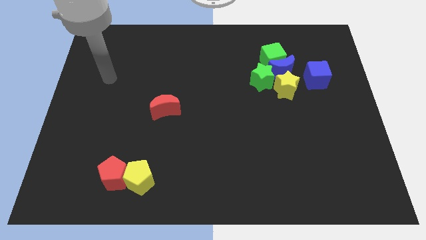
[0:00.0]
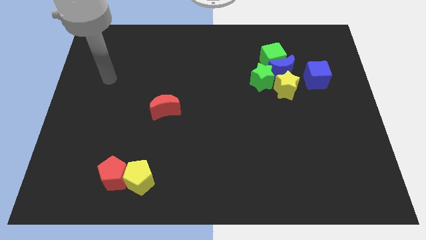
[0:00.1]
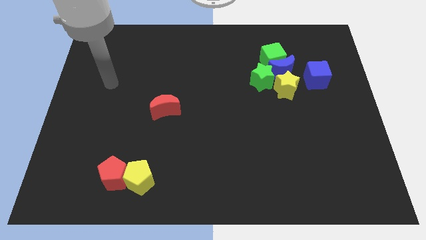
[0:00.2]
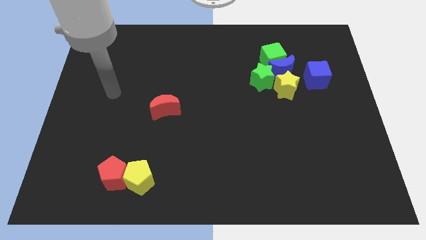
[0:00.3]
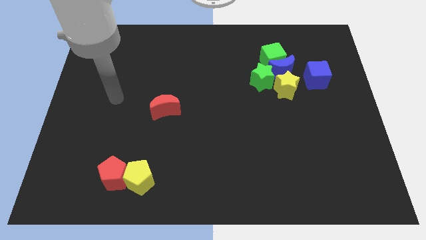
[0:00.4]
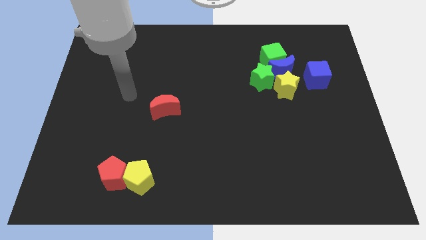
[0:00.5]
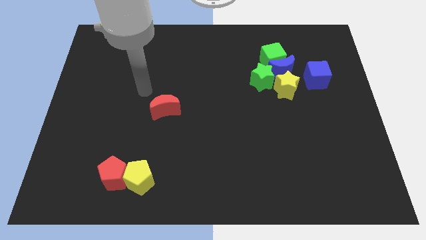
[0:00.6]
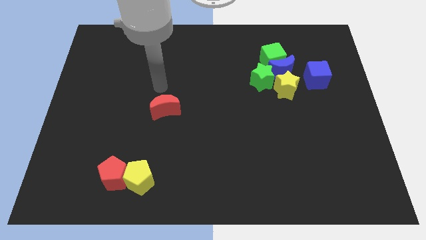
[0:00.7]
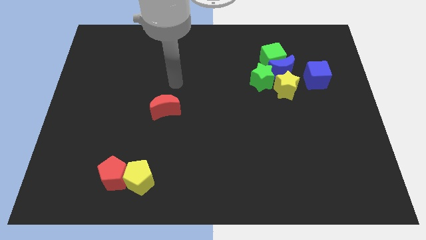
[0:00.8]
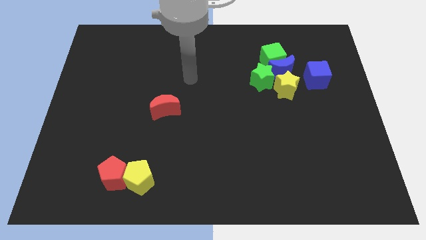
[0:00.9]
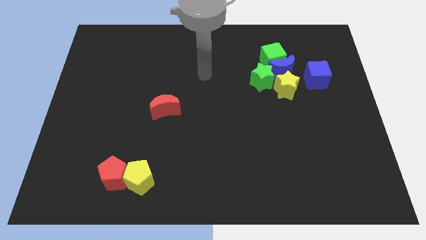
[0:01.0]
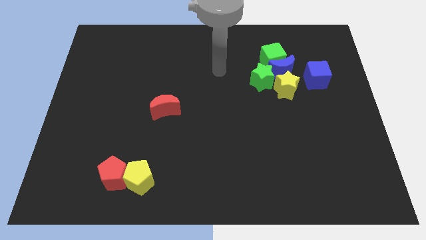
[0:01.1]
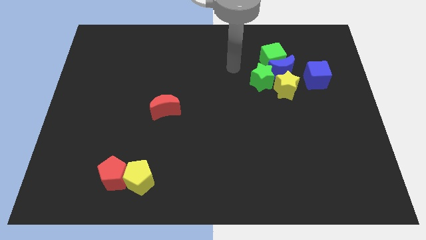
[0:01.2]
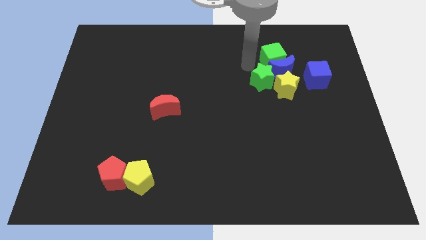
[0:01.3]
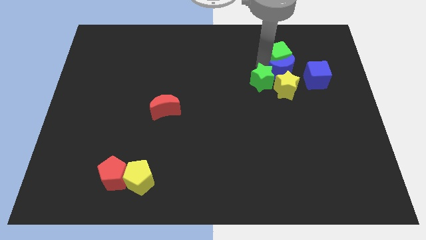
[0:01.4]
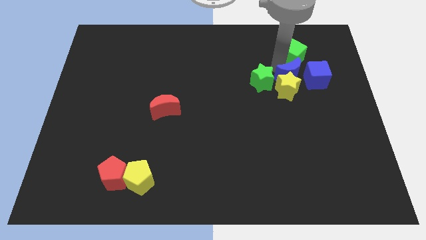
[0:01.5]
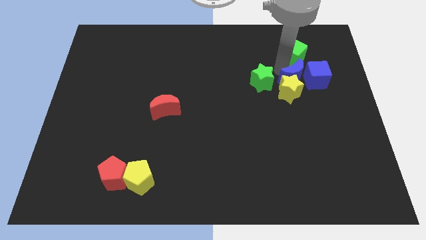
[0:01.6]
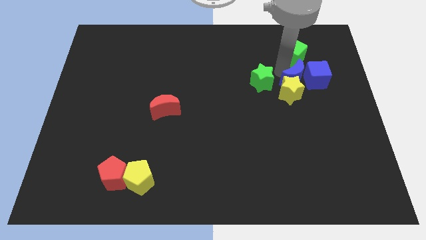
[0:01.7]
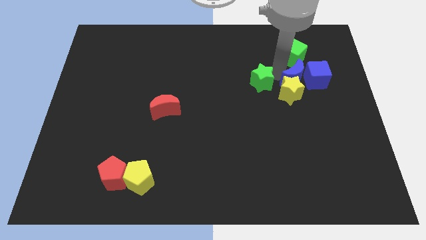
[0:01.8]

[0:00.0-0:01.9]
move your arm near blue moon

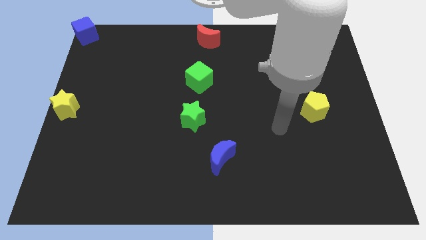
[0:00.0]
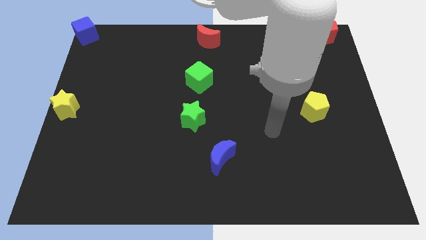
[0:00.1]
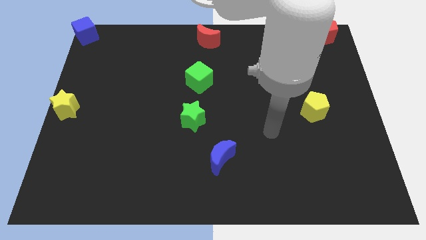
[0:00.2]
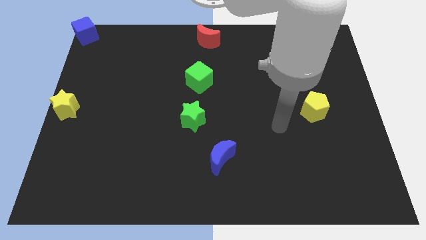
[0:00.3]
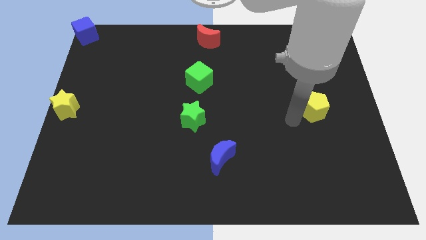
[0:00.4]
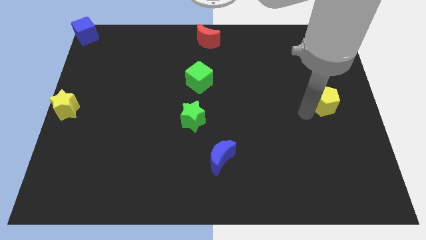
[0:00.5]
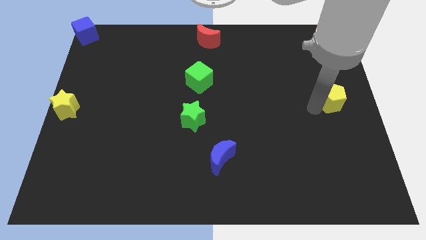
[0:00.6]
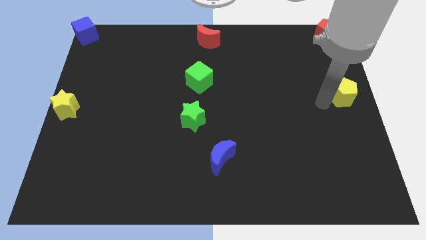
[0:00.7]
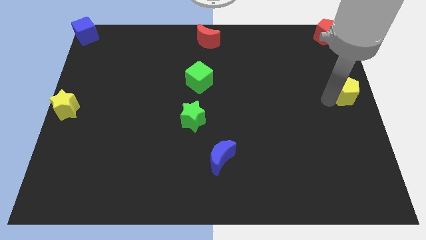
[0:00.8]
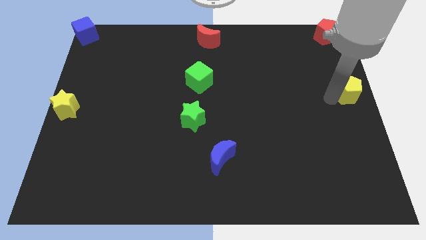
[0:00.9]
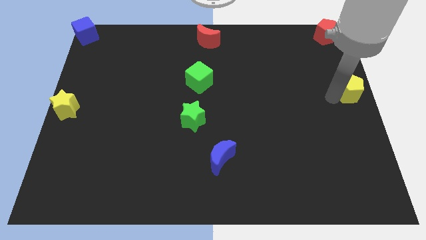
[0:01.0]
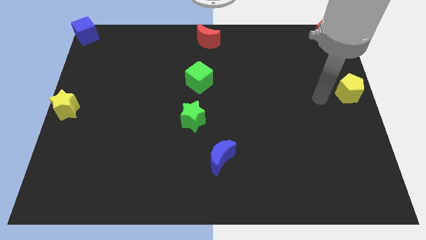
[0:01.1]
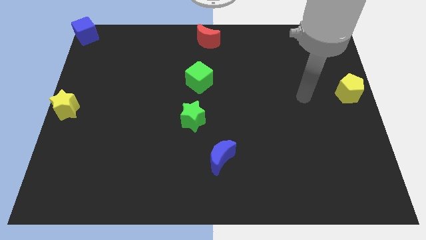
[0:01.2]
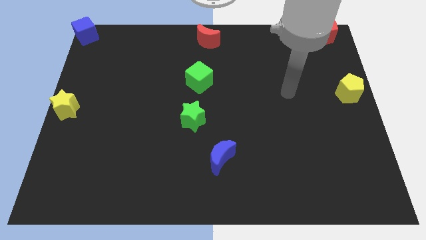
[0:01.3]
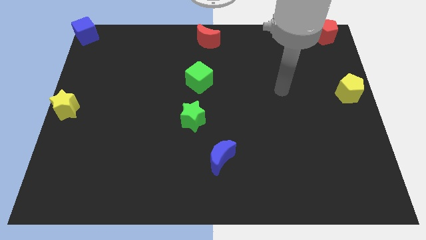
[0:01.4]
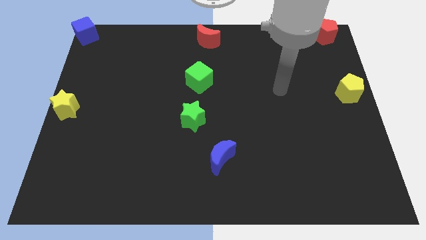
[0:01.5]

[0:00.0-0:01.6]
push the yellow pentagon to the center right side of the board

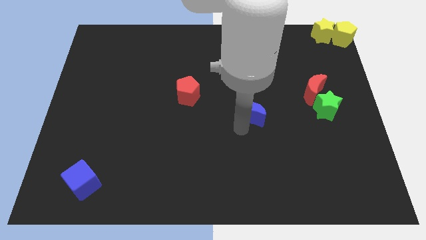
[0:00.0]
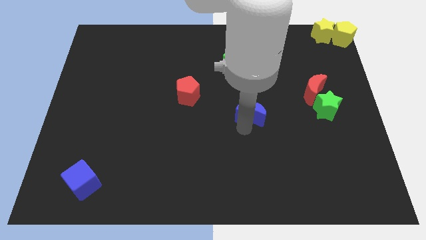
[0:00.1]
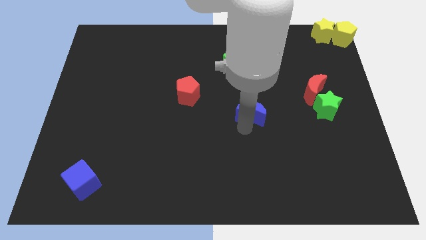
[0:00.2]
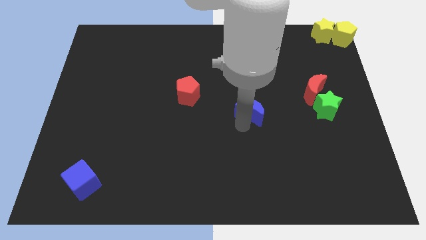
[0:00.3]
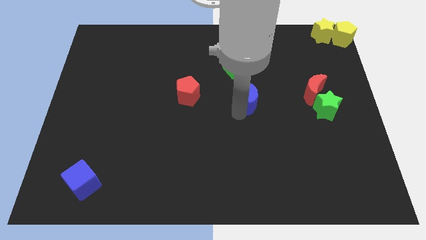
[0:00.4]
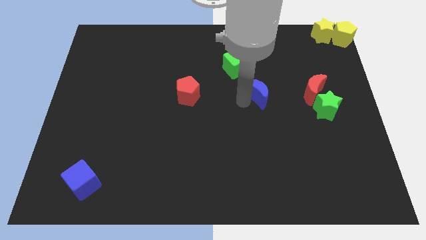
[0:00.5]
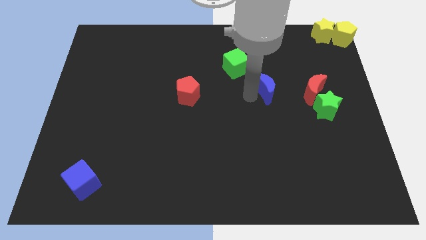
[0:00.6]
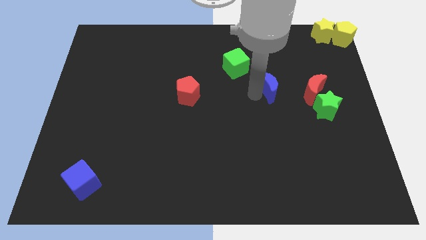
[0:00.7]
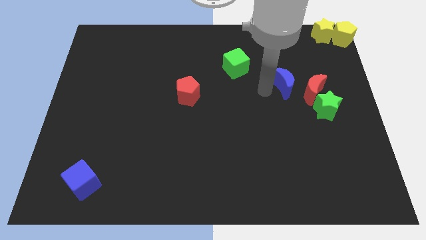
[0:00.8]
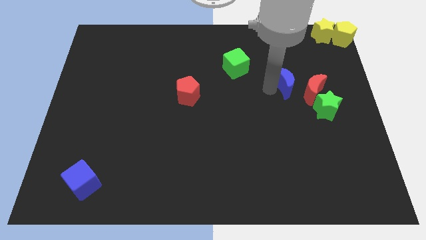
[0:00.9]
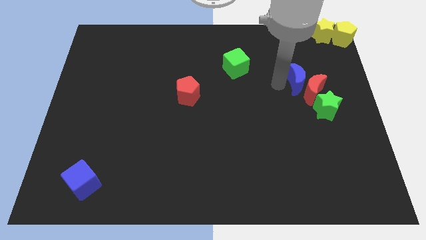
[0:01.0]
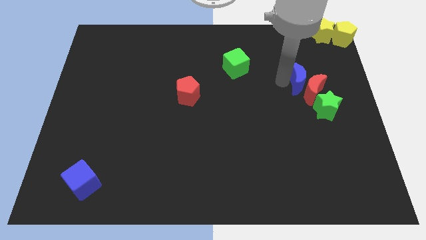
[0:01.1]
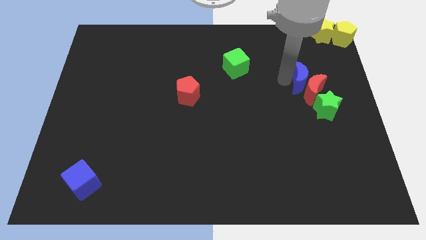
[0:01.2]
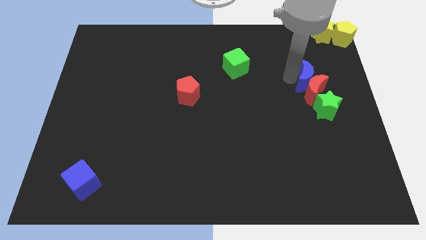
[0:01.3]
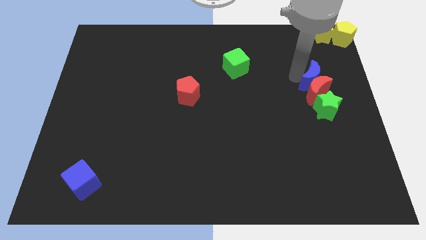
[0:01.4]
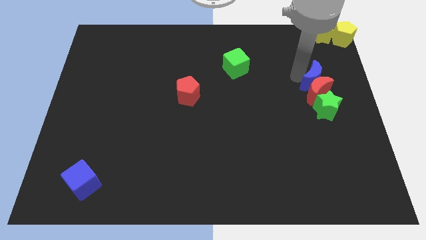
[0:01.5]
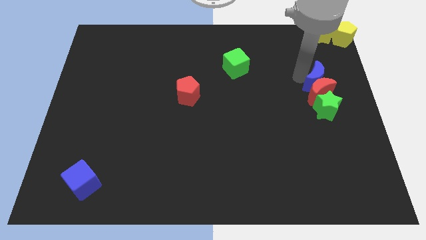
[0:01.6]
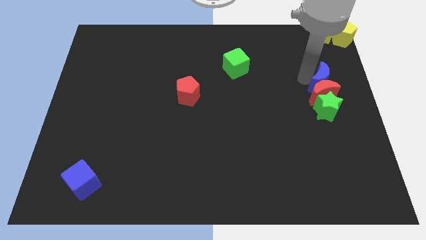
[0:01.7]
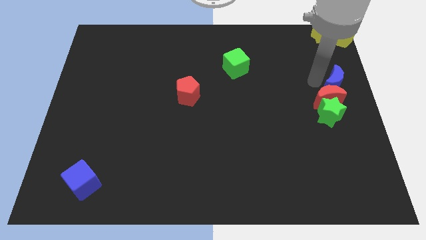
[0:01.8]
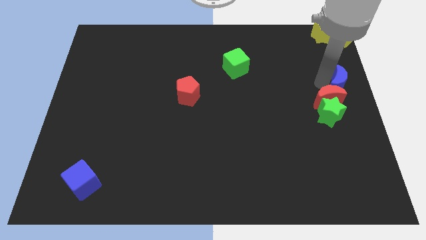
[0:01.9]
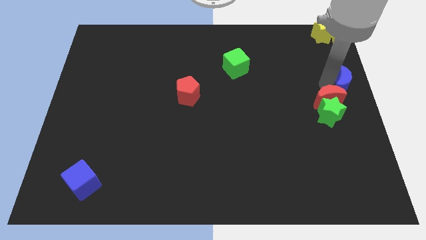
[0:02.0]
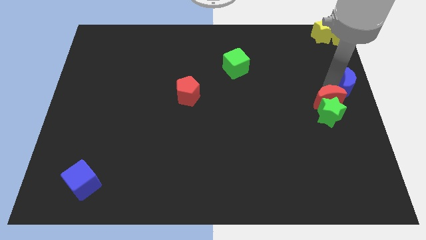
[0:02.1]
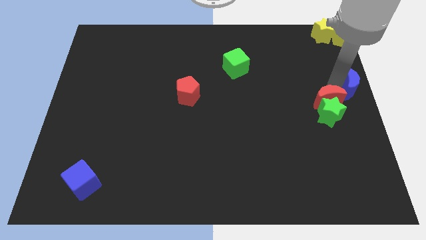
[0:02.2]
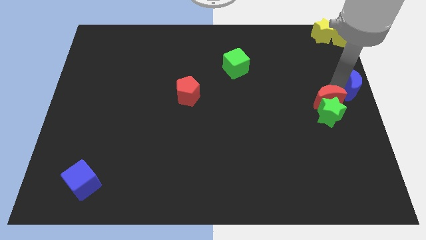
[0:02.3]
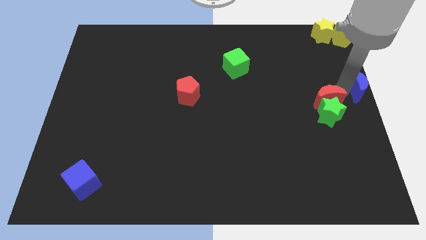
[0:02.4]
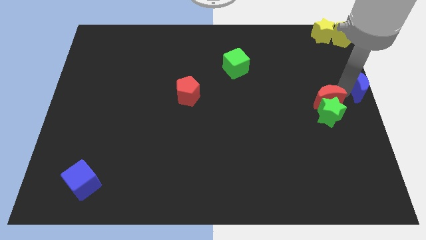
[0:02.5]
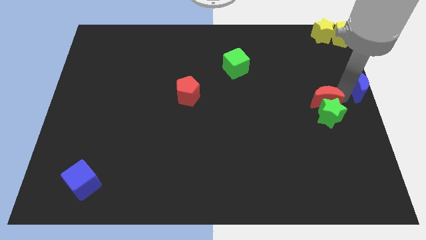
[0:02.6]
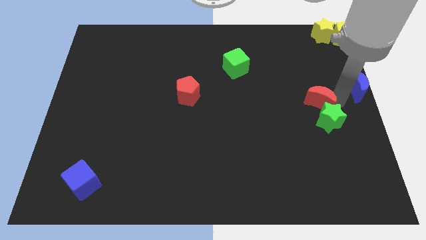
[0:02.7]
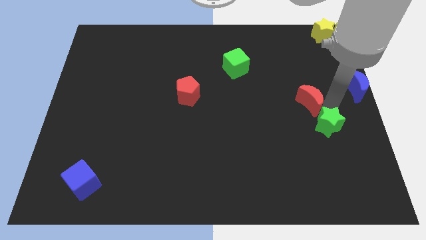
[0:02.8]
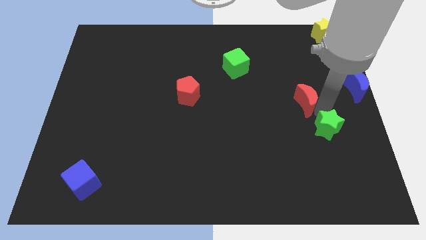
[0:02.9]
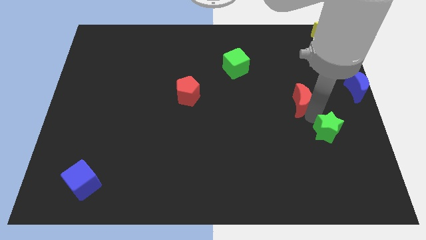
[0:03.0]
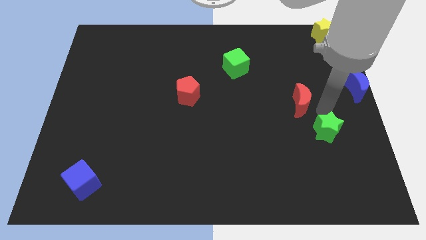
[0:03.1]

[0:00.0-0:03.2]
push the blue moon to the center right of the board

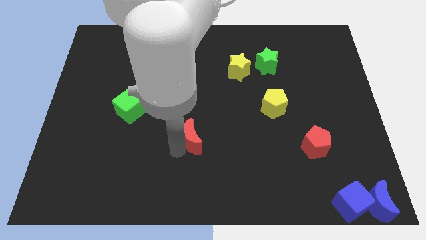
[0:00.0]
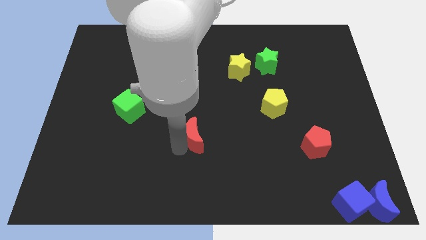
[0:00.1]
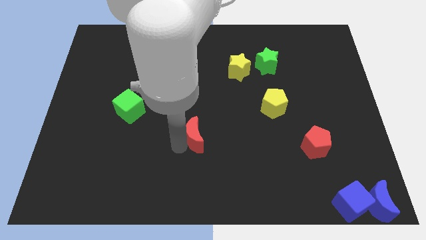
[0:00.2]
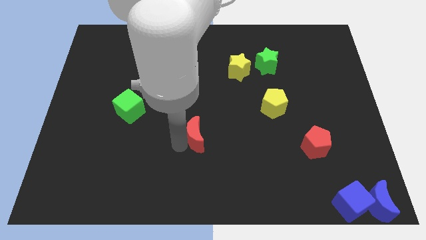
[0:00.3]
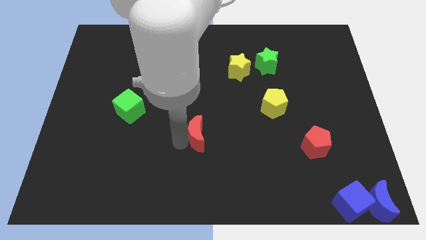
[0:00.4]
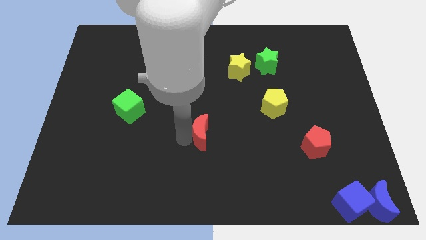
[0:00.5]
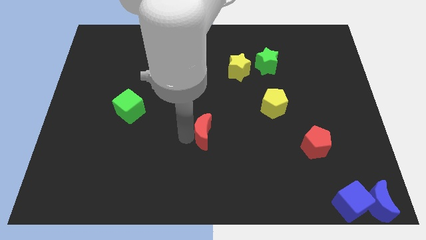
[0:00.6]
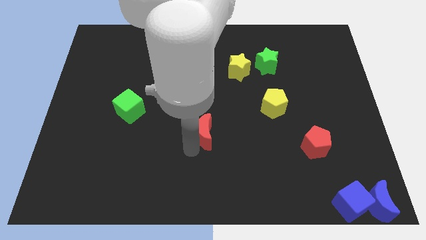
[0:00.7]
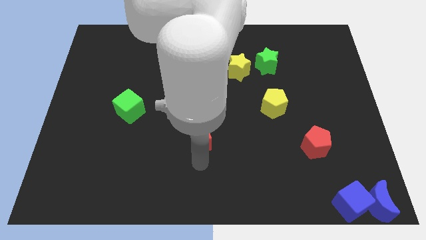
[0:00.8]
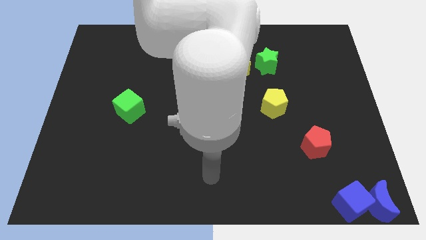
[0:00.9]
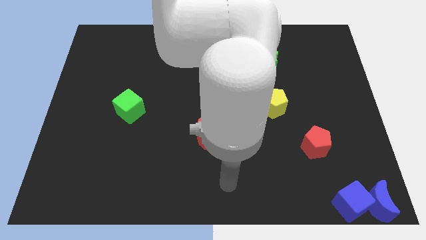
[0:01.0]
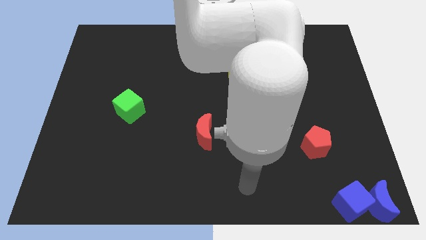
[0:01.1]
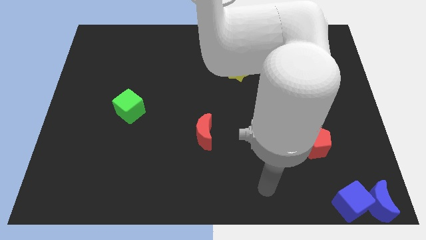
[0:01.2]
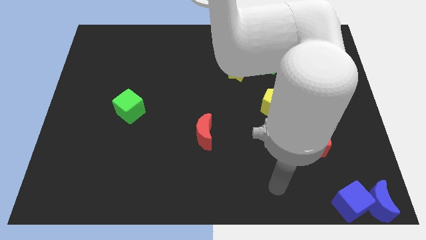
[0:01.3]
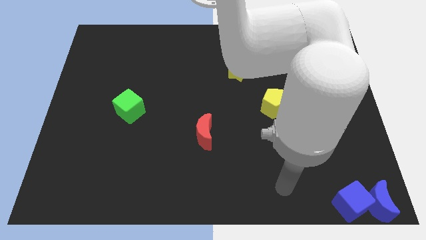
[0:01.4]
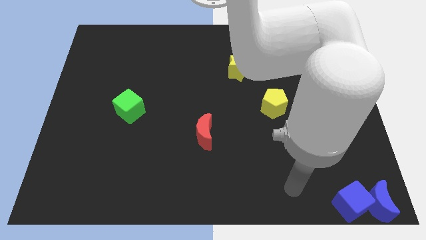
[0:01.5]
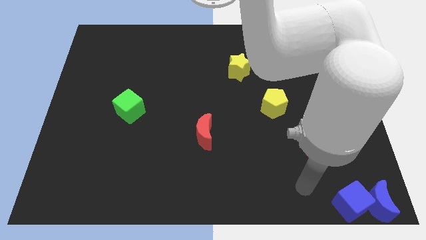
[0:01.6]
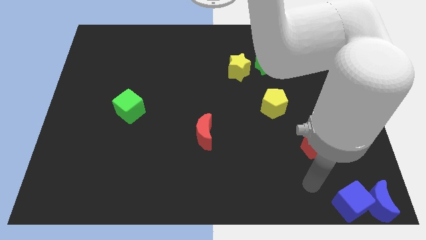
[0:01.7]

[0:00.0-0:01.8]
slide the red moon slightly to the right

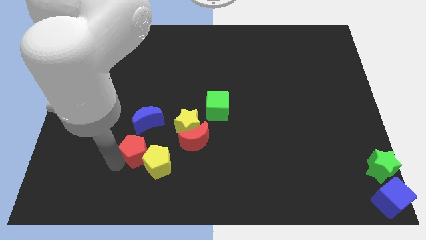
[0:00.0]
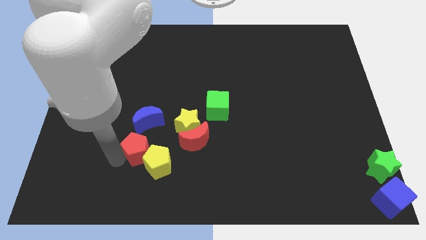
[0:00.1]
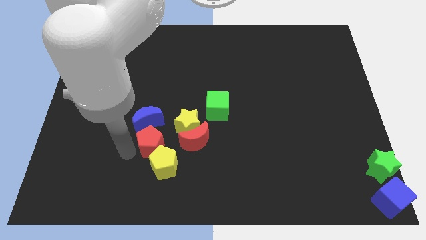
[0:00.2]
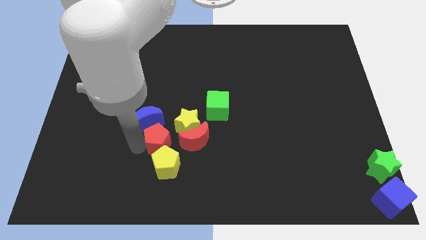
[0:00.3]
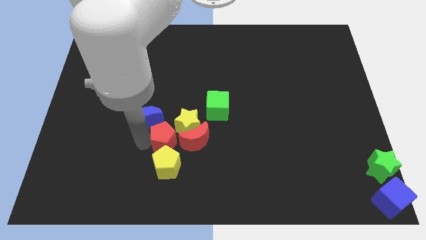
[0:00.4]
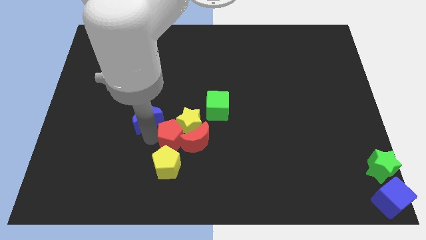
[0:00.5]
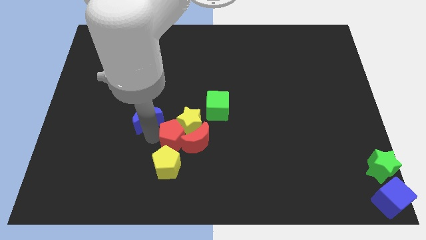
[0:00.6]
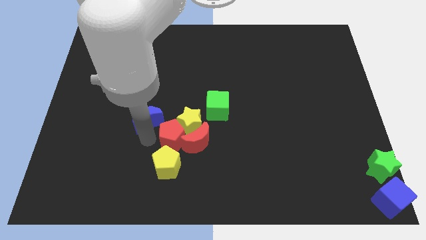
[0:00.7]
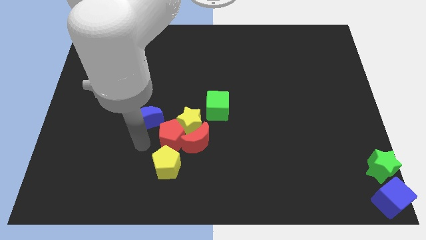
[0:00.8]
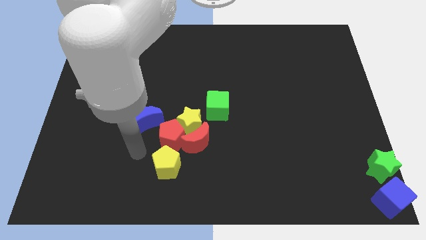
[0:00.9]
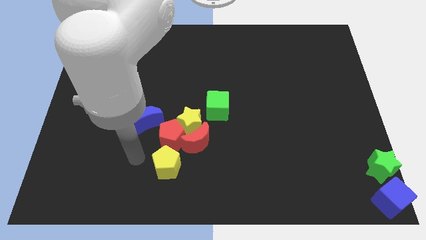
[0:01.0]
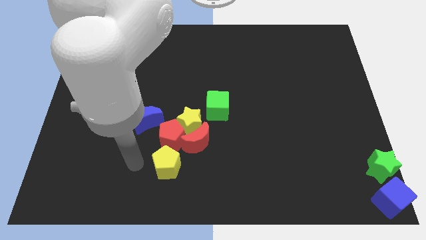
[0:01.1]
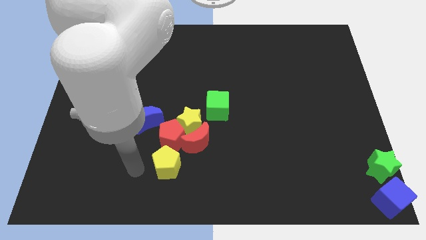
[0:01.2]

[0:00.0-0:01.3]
push red pentagon into yellow star
